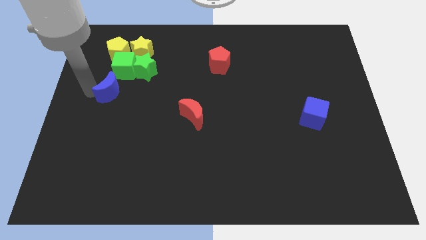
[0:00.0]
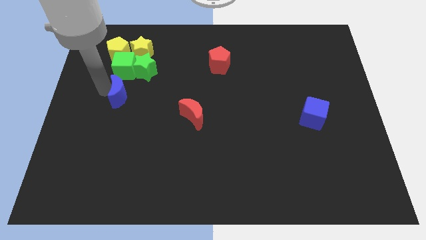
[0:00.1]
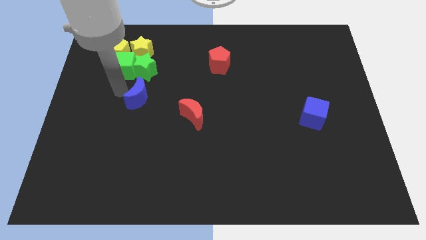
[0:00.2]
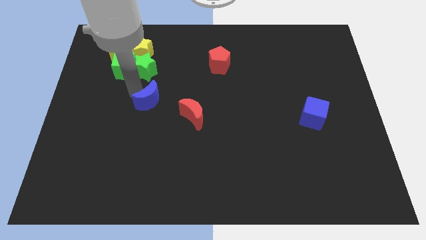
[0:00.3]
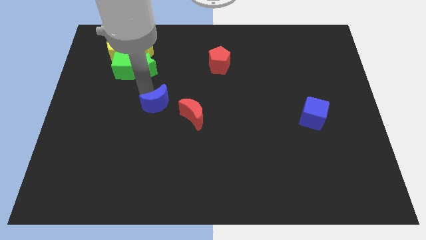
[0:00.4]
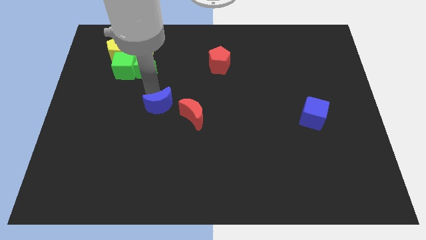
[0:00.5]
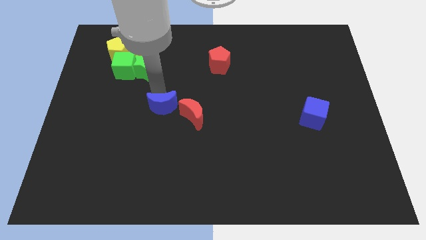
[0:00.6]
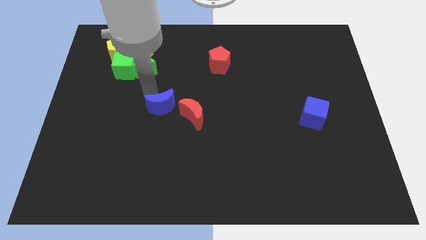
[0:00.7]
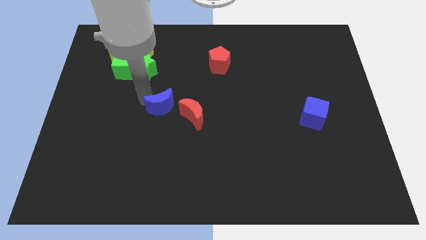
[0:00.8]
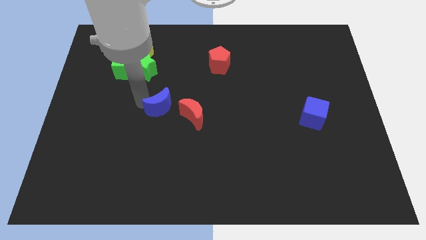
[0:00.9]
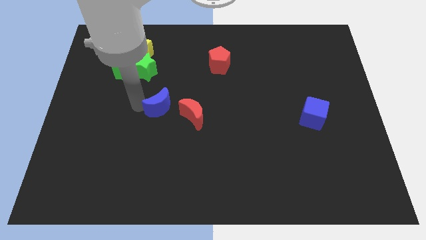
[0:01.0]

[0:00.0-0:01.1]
push the blue moon to the right

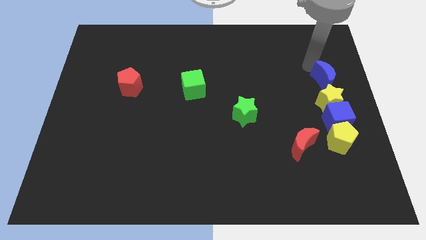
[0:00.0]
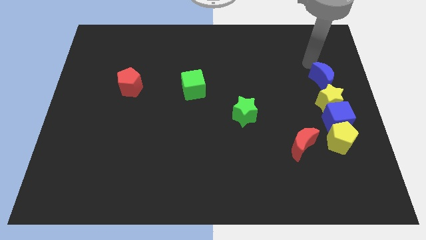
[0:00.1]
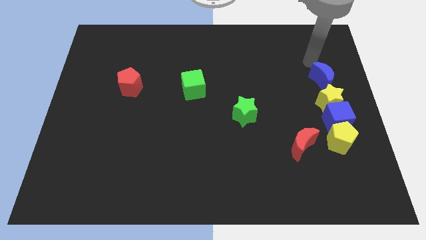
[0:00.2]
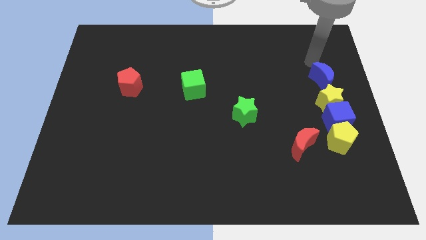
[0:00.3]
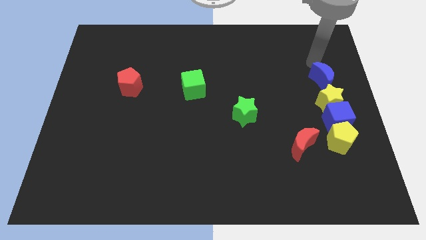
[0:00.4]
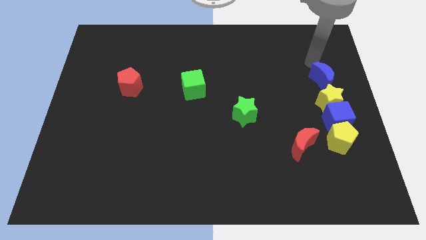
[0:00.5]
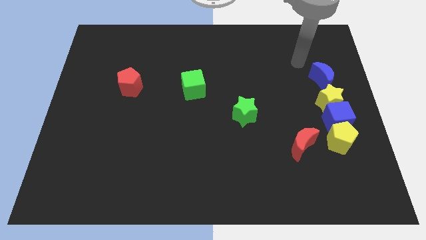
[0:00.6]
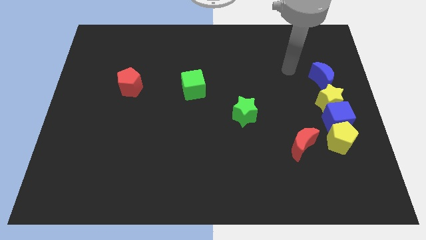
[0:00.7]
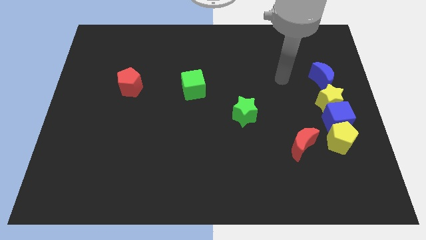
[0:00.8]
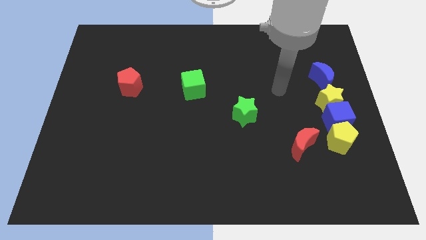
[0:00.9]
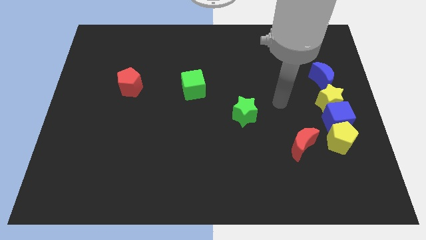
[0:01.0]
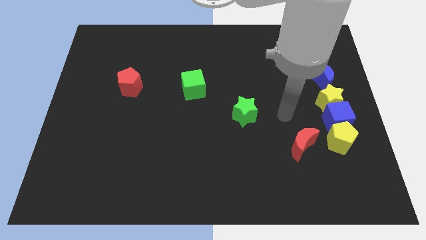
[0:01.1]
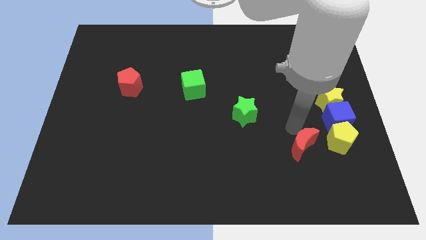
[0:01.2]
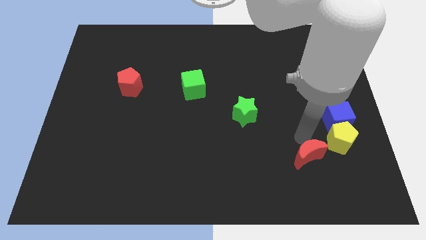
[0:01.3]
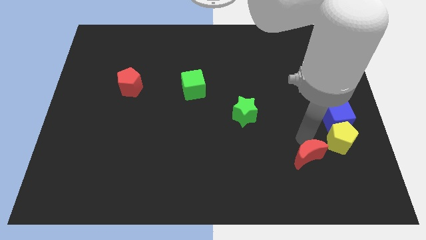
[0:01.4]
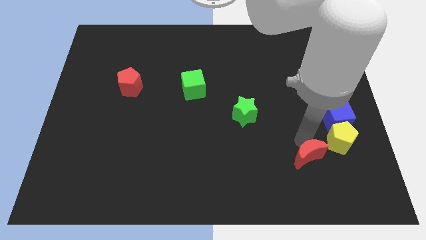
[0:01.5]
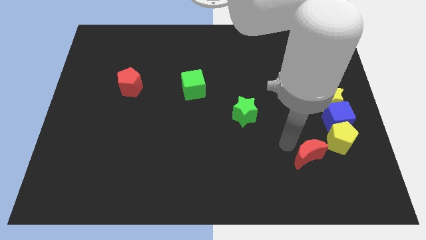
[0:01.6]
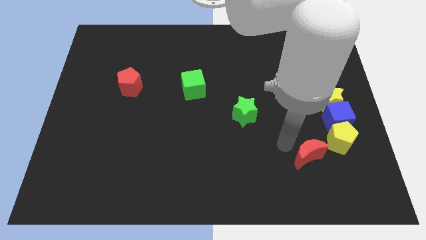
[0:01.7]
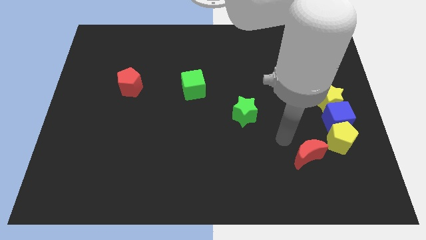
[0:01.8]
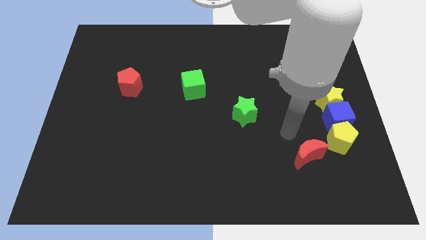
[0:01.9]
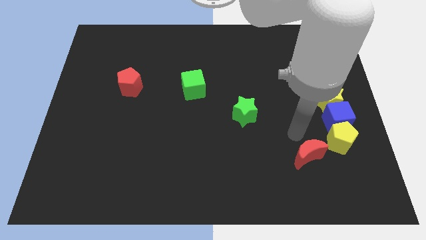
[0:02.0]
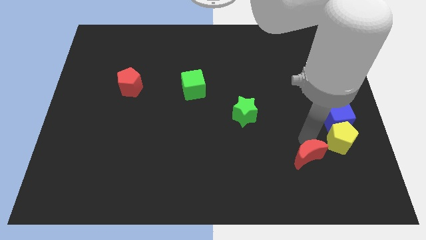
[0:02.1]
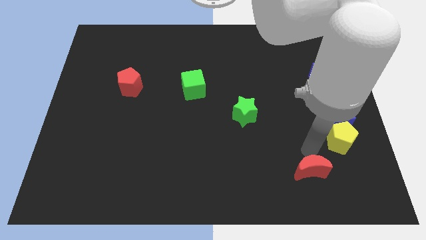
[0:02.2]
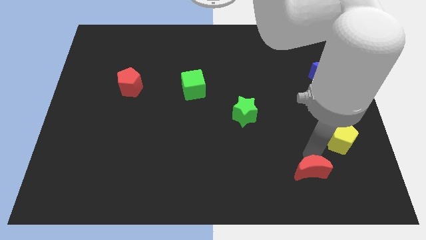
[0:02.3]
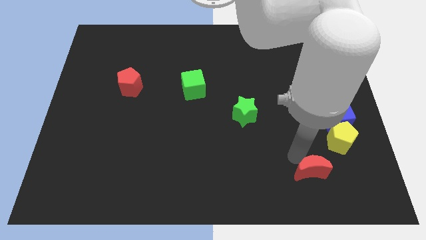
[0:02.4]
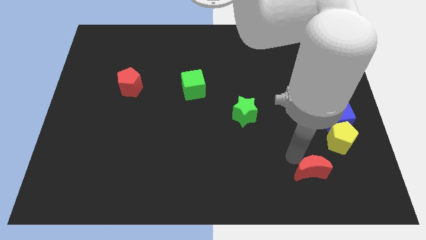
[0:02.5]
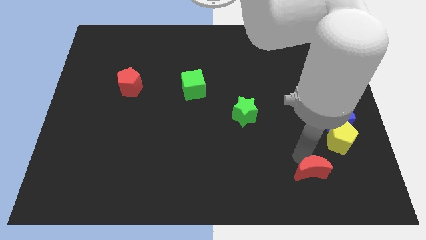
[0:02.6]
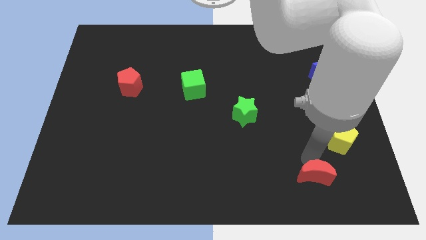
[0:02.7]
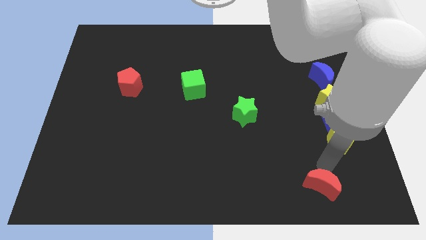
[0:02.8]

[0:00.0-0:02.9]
push the red crescent diagonally to green star

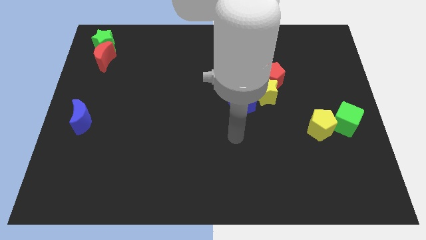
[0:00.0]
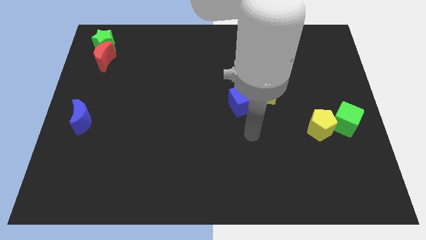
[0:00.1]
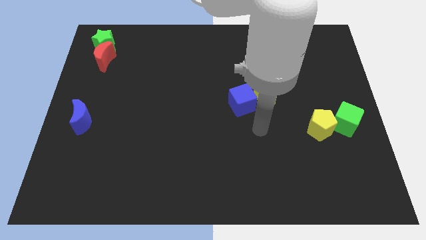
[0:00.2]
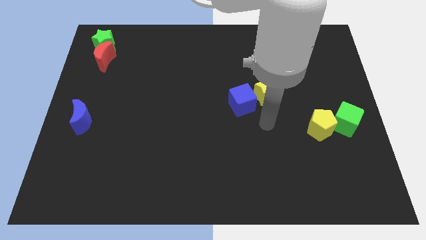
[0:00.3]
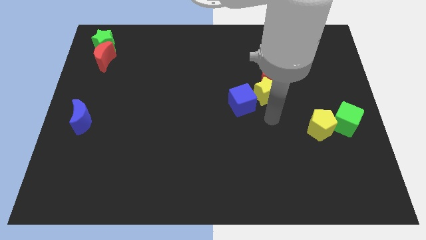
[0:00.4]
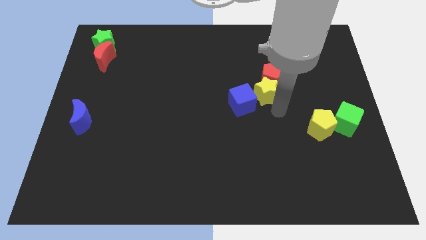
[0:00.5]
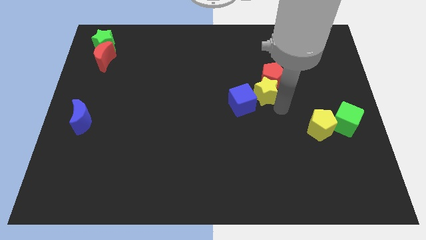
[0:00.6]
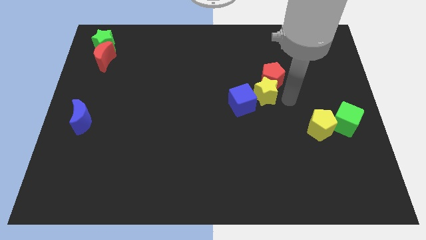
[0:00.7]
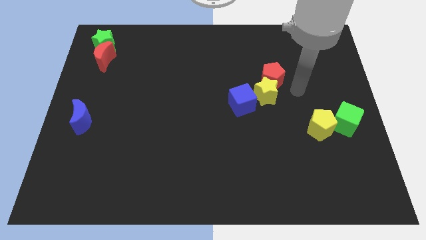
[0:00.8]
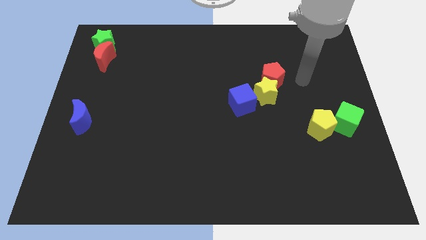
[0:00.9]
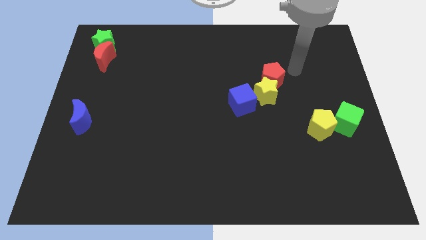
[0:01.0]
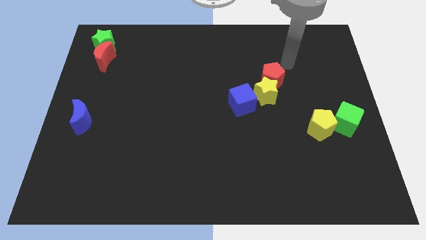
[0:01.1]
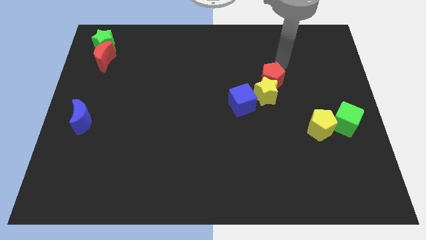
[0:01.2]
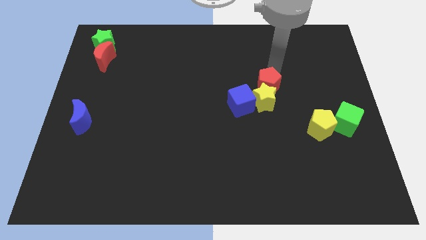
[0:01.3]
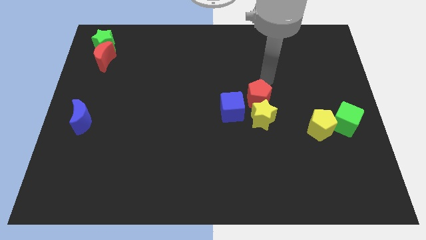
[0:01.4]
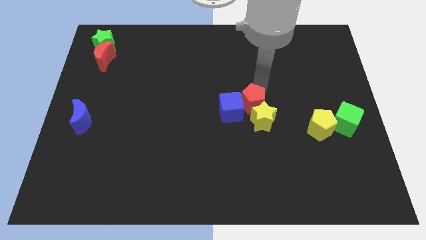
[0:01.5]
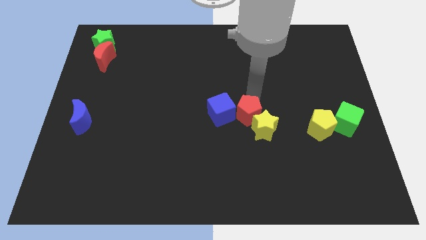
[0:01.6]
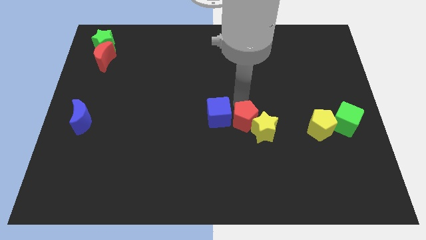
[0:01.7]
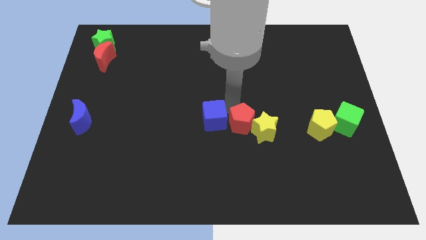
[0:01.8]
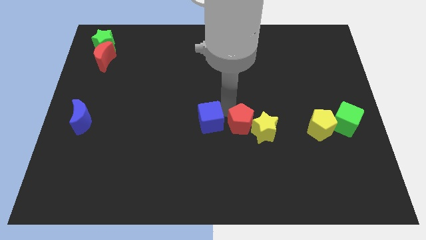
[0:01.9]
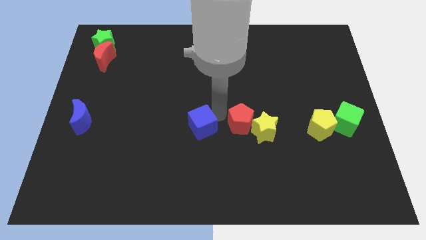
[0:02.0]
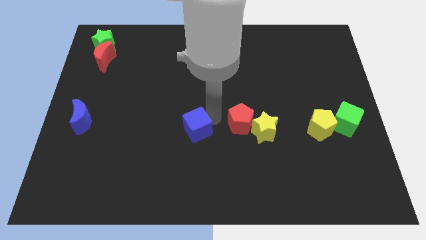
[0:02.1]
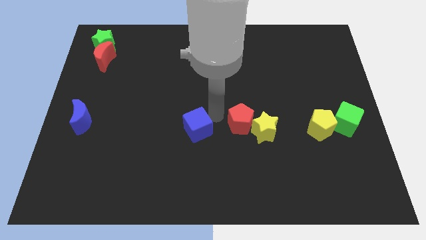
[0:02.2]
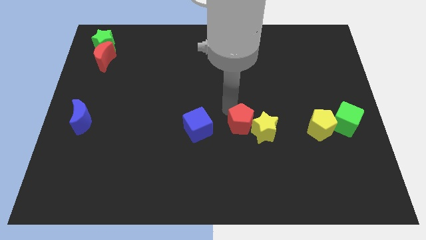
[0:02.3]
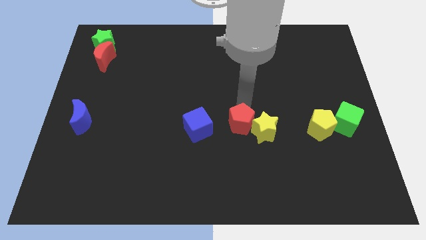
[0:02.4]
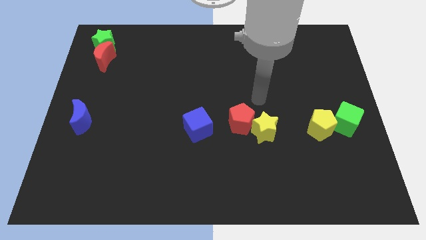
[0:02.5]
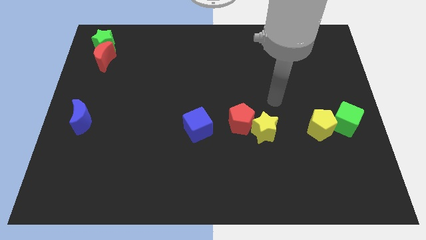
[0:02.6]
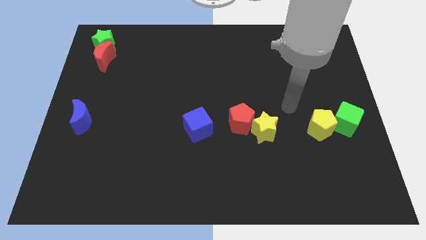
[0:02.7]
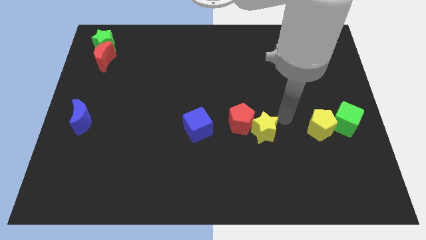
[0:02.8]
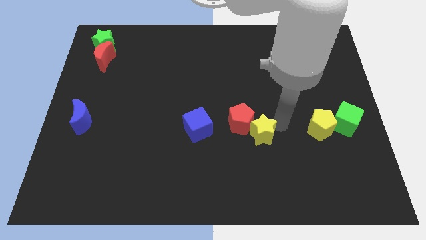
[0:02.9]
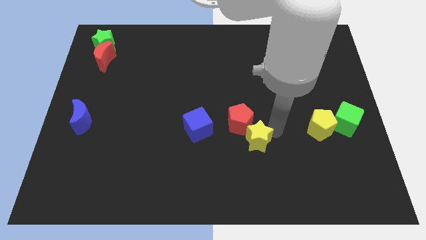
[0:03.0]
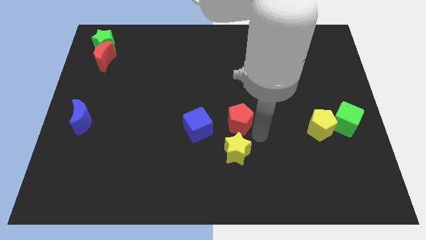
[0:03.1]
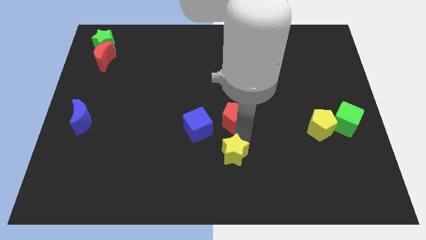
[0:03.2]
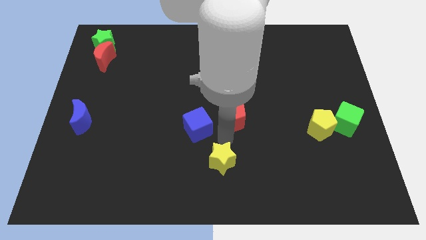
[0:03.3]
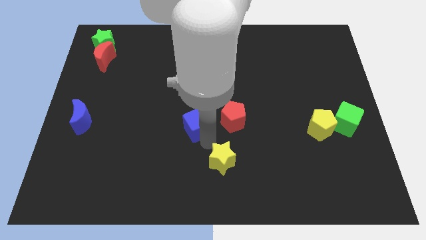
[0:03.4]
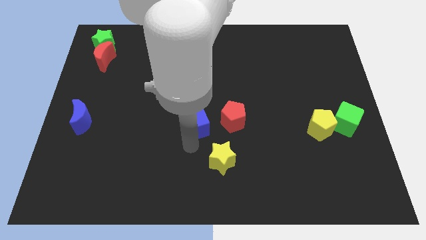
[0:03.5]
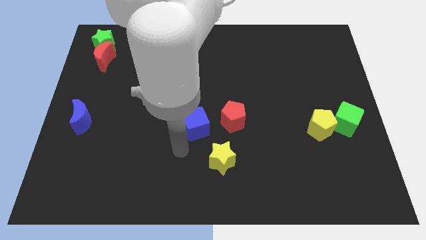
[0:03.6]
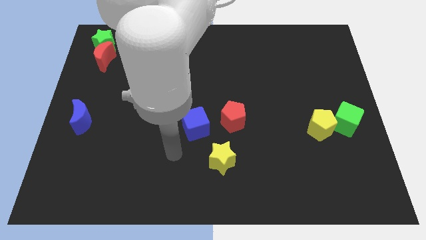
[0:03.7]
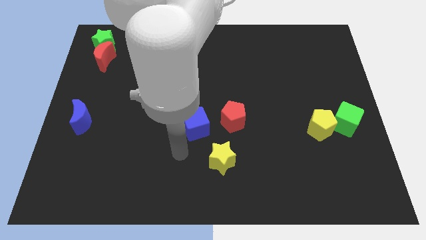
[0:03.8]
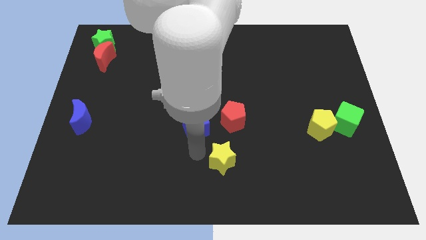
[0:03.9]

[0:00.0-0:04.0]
form a triangle with red pentagon blue cube and yellow star

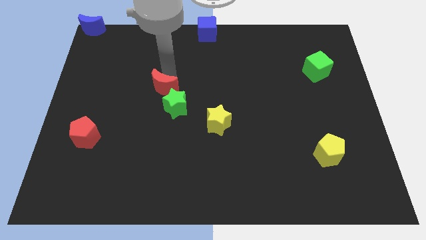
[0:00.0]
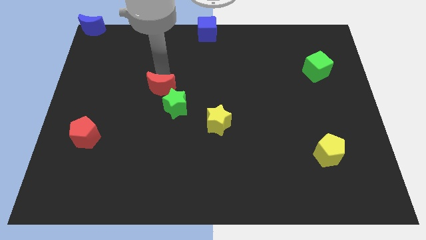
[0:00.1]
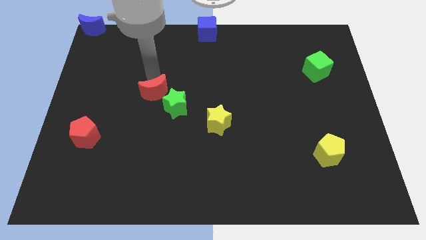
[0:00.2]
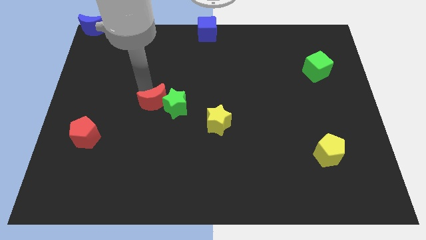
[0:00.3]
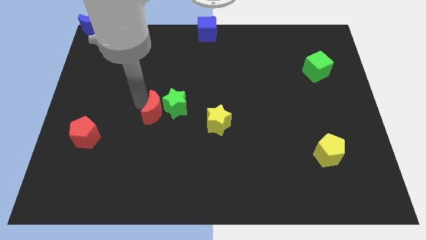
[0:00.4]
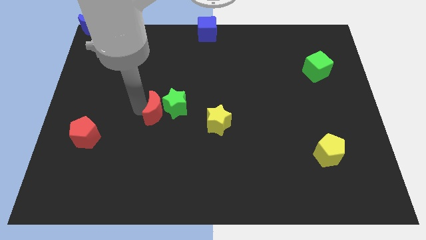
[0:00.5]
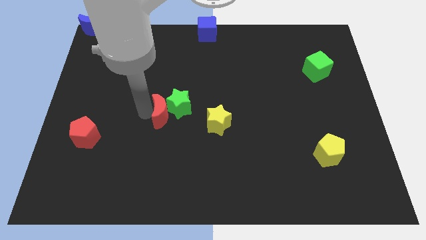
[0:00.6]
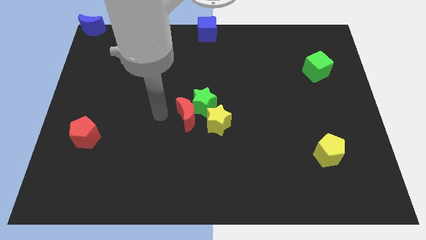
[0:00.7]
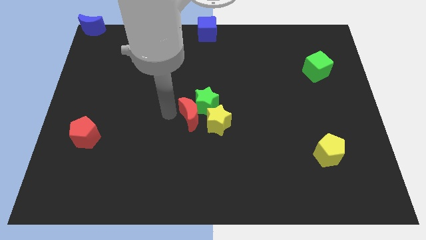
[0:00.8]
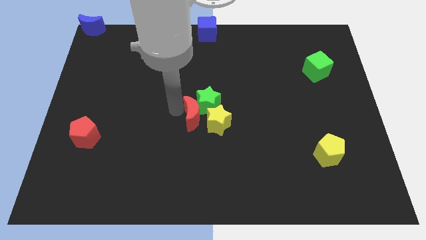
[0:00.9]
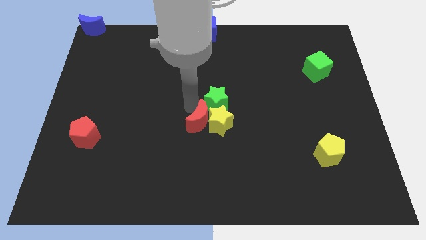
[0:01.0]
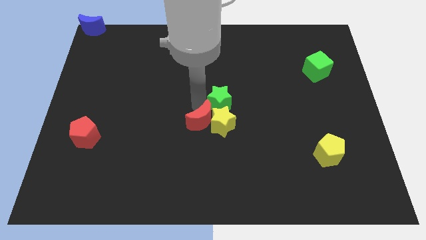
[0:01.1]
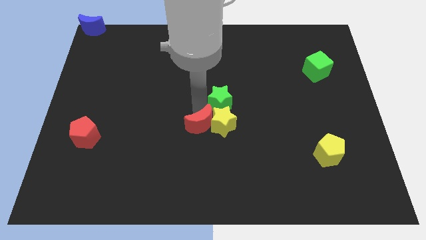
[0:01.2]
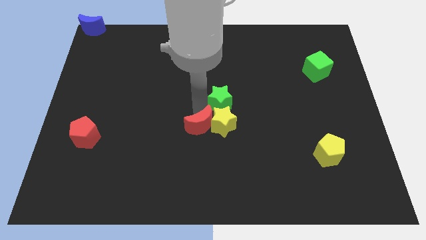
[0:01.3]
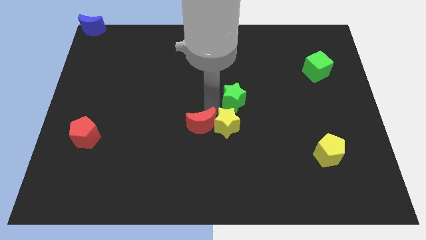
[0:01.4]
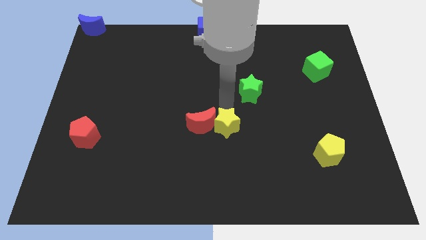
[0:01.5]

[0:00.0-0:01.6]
push the red moon to the center of the board
